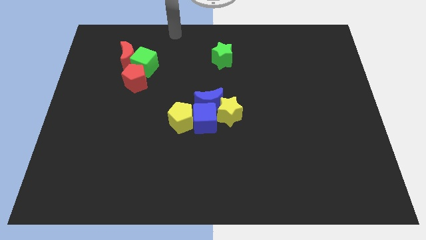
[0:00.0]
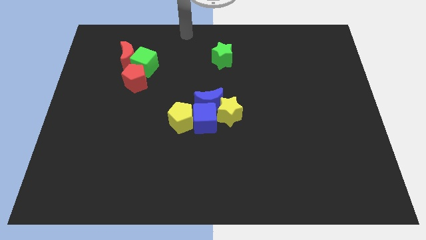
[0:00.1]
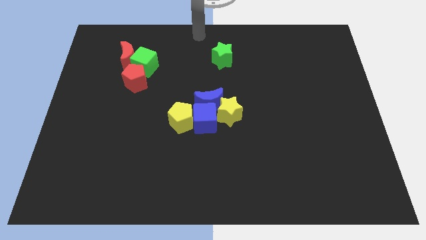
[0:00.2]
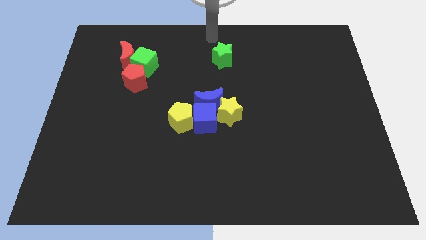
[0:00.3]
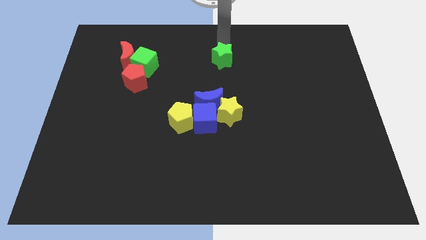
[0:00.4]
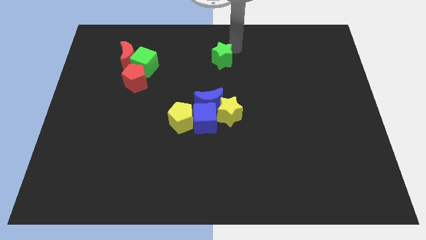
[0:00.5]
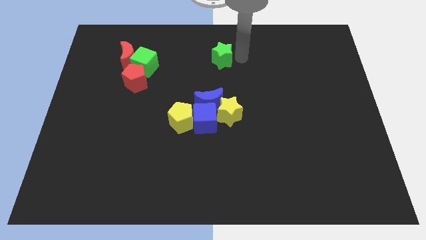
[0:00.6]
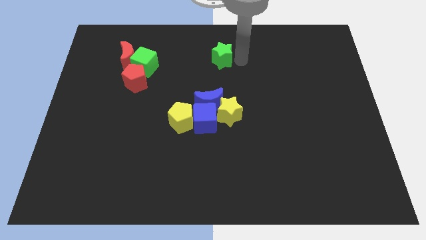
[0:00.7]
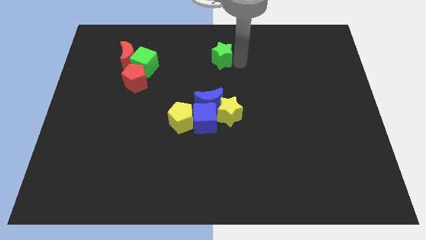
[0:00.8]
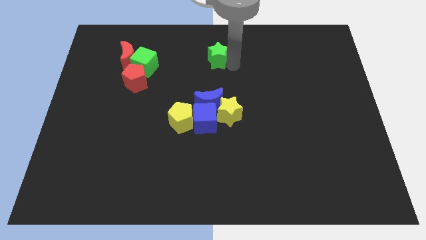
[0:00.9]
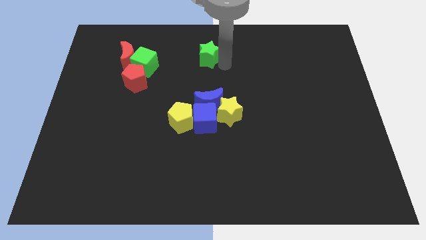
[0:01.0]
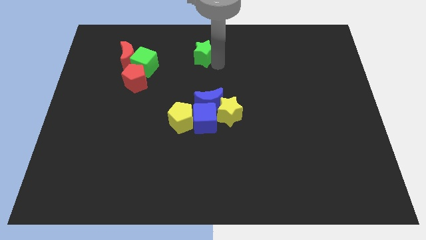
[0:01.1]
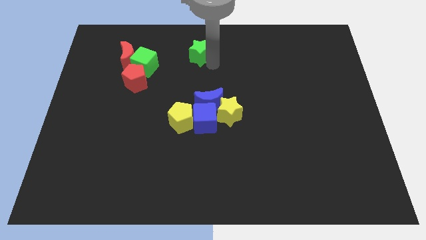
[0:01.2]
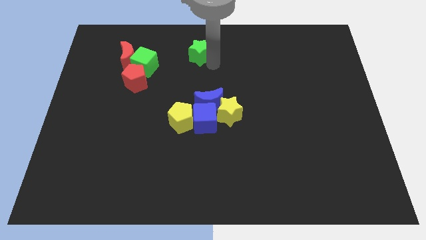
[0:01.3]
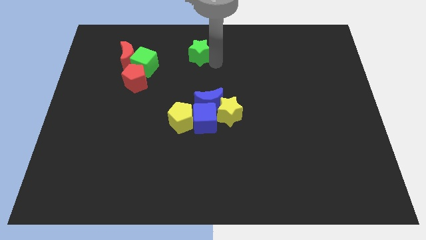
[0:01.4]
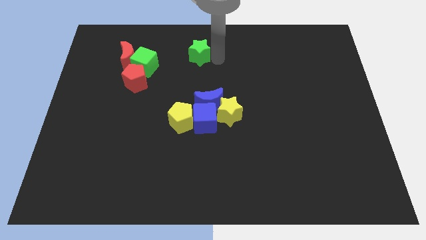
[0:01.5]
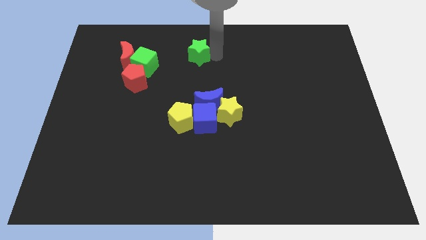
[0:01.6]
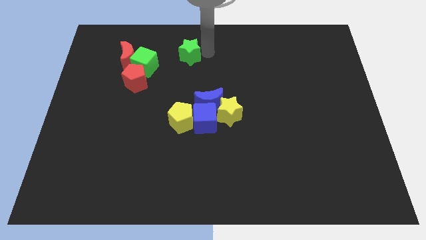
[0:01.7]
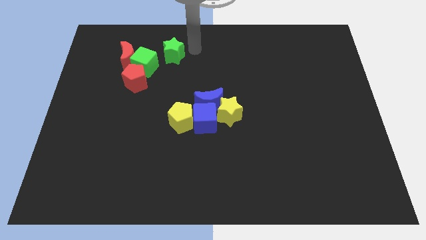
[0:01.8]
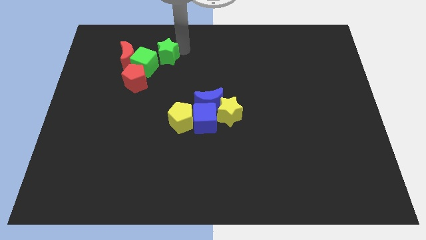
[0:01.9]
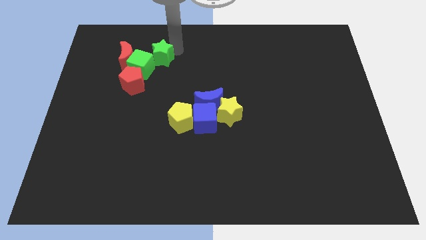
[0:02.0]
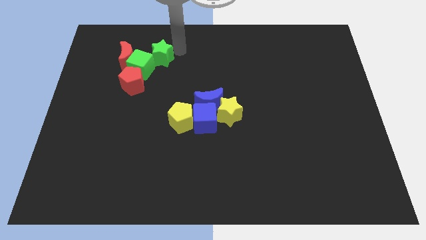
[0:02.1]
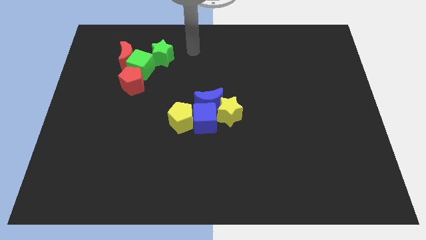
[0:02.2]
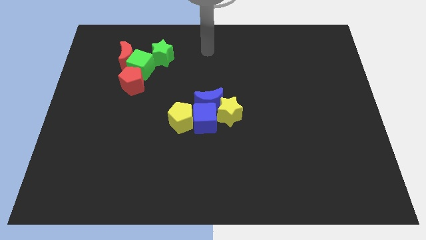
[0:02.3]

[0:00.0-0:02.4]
place green star above green cube

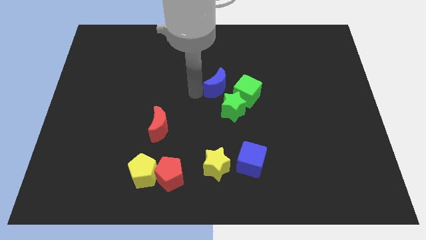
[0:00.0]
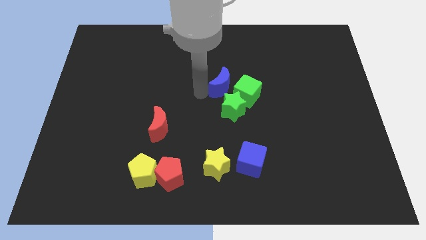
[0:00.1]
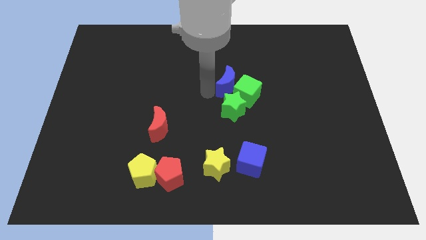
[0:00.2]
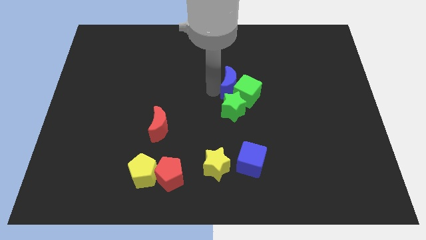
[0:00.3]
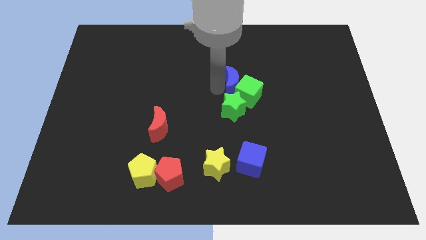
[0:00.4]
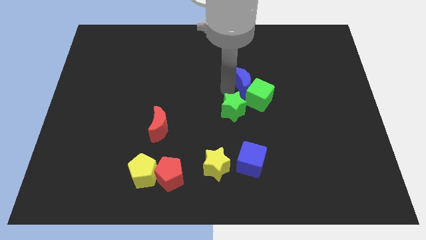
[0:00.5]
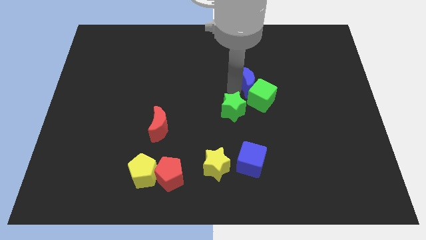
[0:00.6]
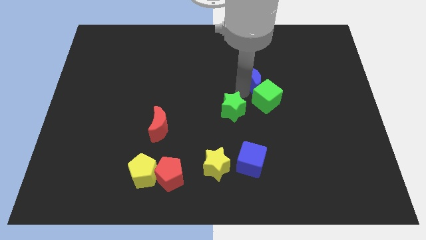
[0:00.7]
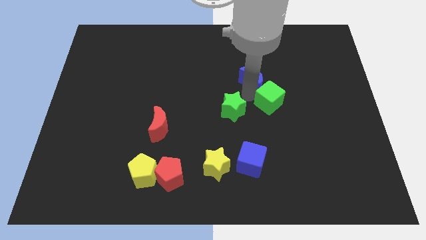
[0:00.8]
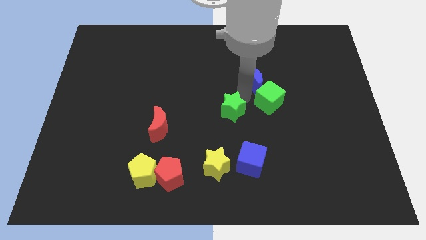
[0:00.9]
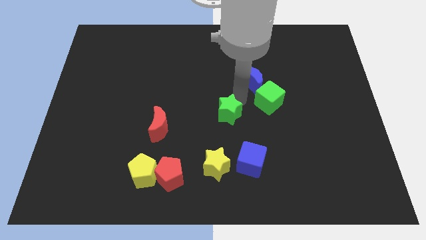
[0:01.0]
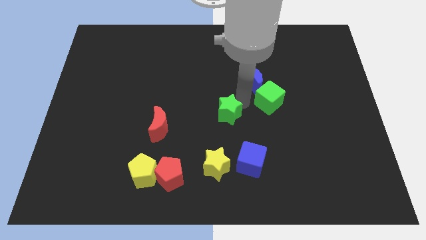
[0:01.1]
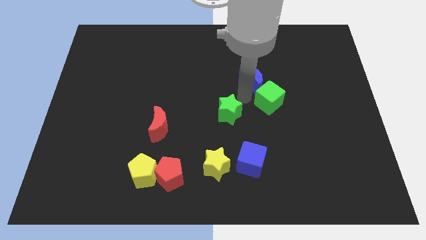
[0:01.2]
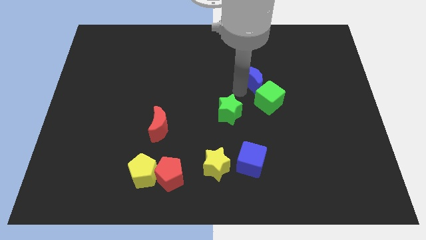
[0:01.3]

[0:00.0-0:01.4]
push blue crescent in to green cube

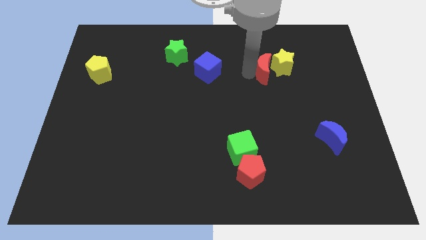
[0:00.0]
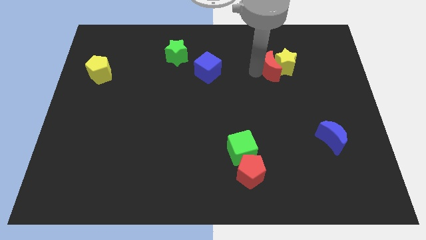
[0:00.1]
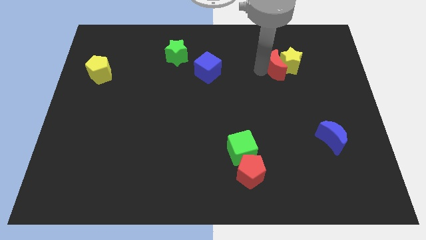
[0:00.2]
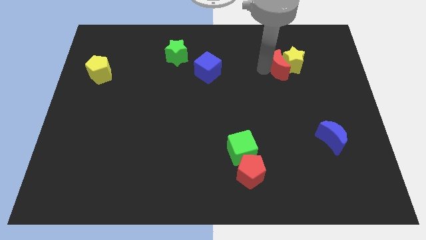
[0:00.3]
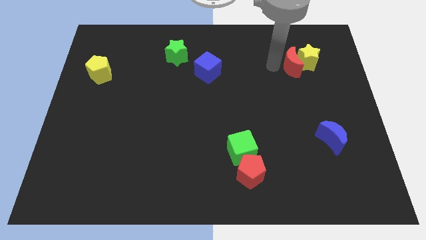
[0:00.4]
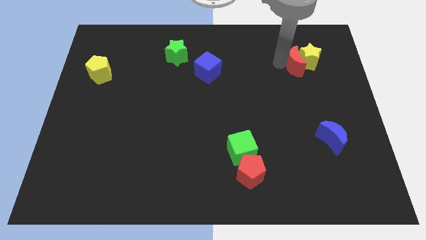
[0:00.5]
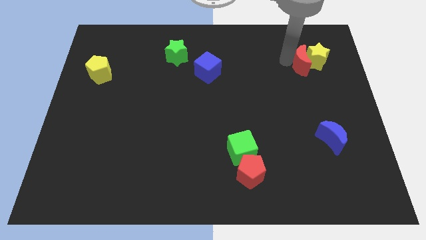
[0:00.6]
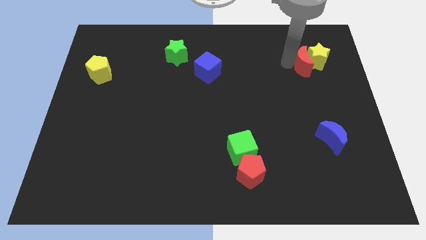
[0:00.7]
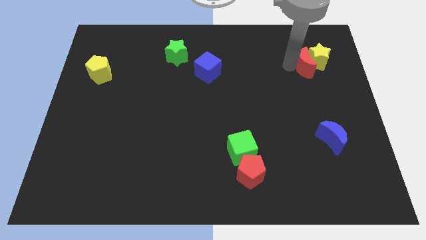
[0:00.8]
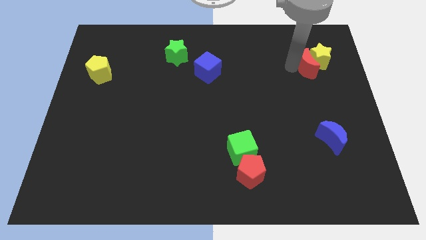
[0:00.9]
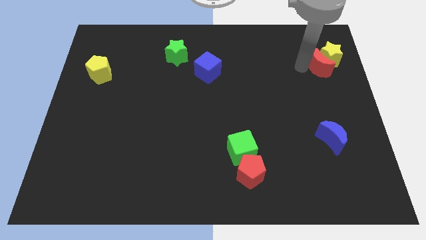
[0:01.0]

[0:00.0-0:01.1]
push red moon into yellow star

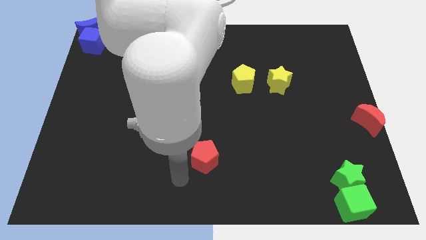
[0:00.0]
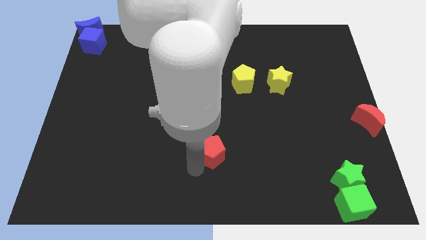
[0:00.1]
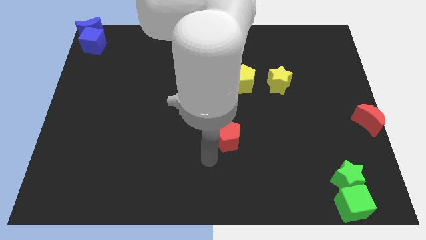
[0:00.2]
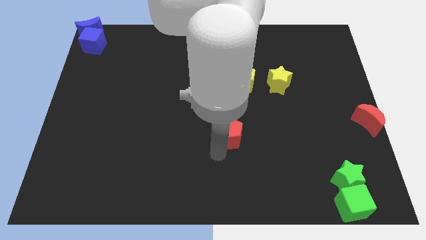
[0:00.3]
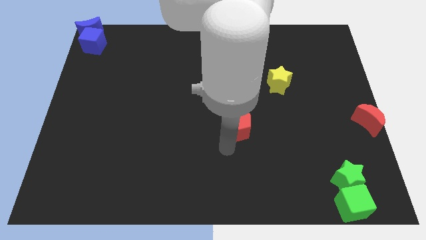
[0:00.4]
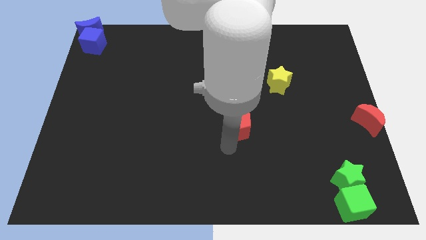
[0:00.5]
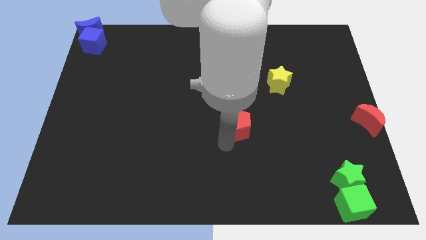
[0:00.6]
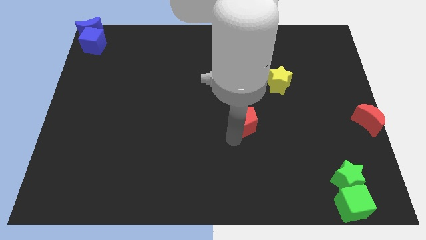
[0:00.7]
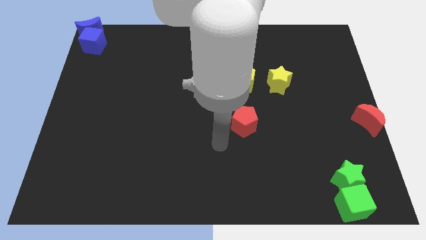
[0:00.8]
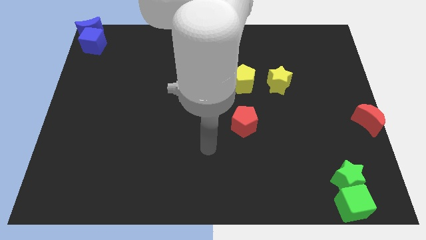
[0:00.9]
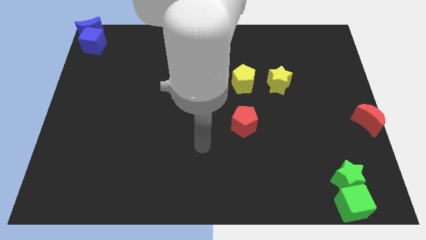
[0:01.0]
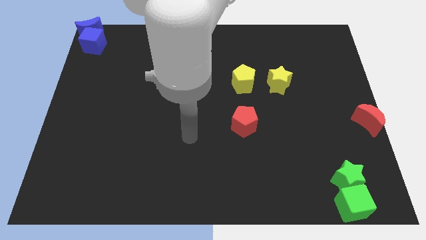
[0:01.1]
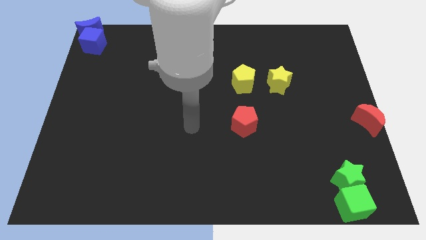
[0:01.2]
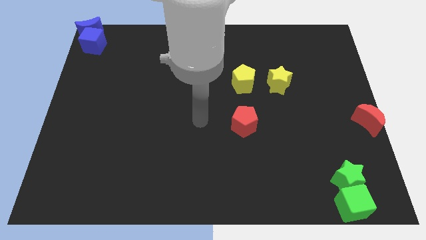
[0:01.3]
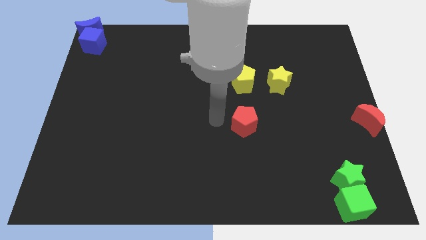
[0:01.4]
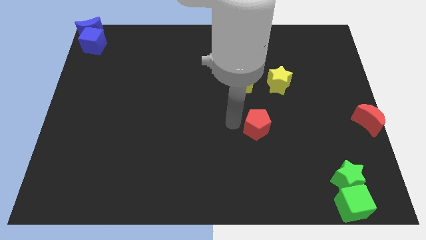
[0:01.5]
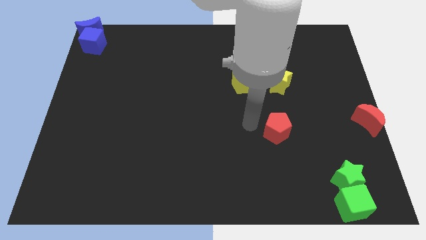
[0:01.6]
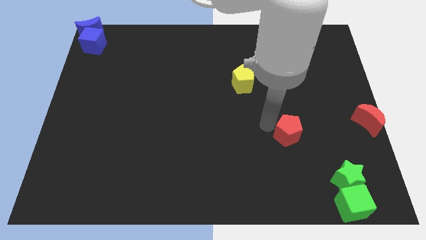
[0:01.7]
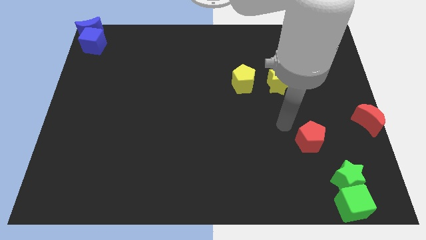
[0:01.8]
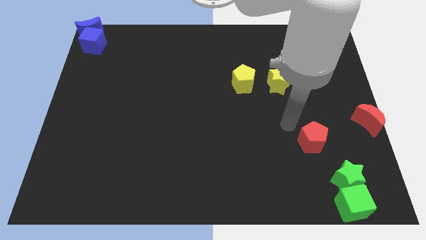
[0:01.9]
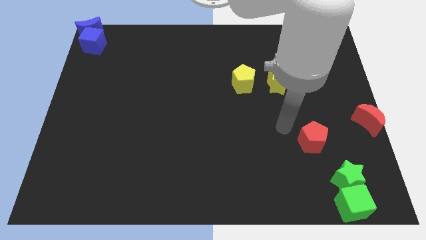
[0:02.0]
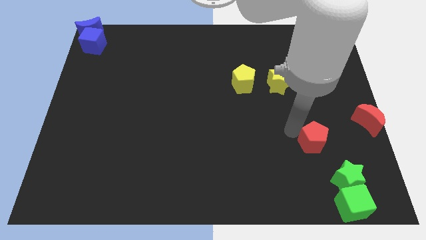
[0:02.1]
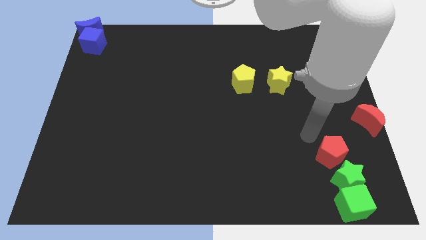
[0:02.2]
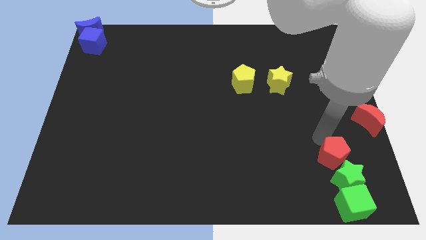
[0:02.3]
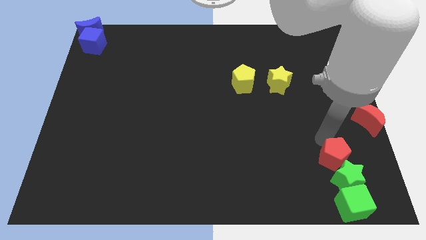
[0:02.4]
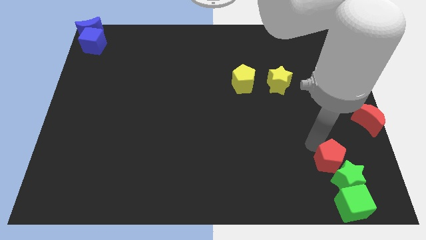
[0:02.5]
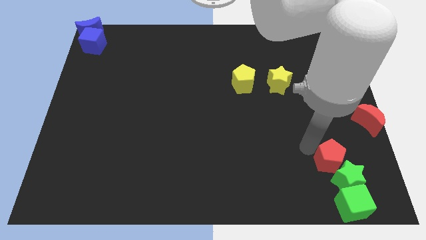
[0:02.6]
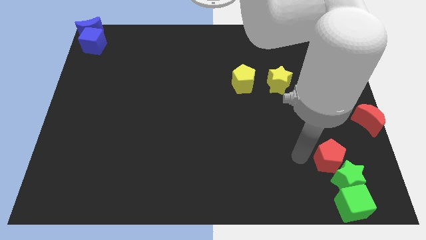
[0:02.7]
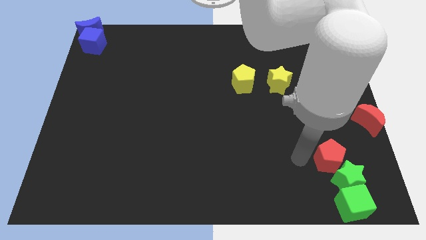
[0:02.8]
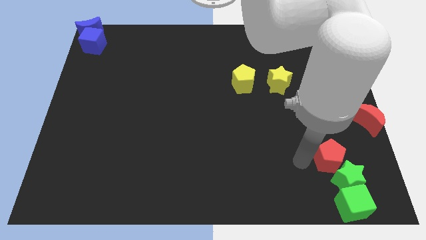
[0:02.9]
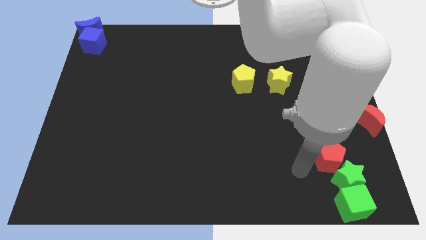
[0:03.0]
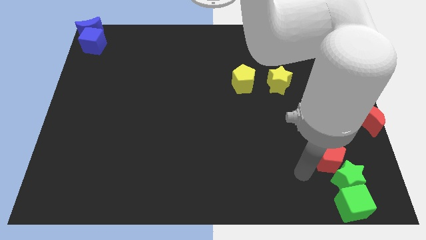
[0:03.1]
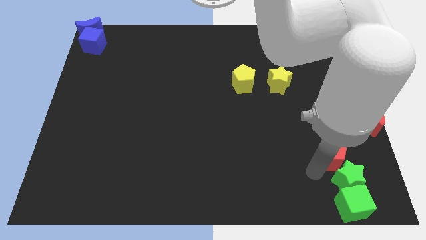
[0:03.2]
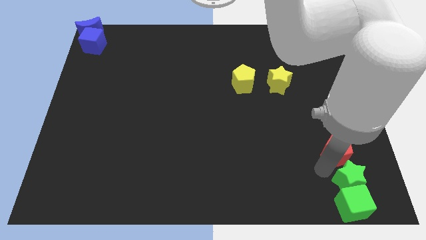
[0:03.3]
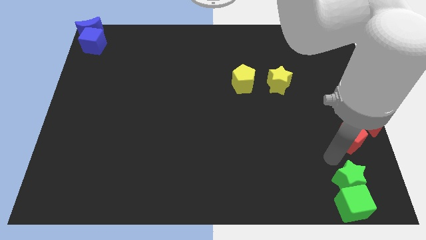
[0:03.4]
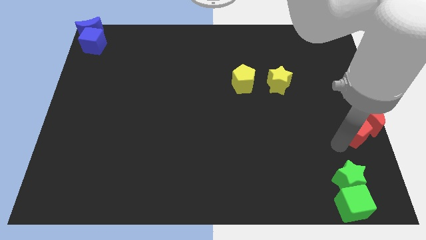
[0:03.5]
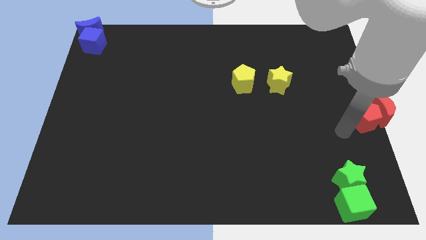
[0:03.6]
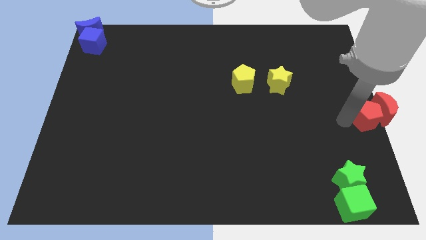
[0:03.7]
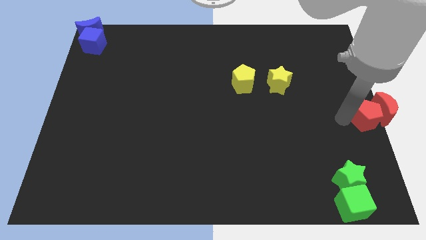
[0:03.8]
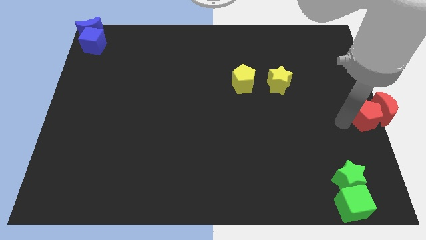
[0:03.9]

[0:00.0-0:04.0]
push the red pentagon into the red moon

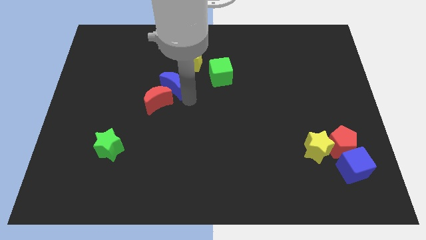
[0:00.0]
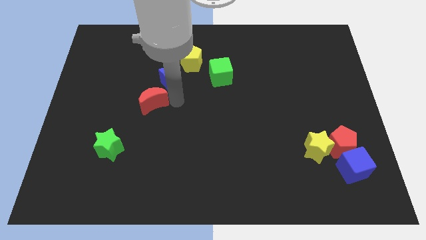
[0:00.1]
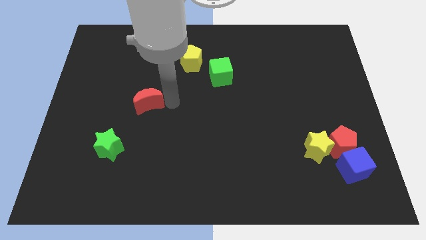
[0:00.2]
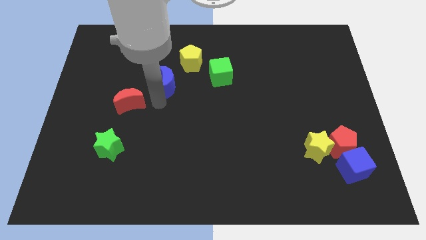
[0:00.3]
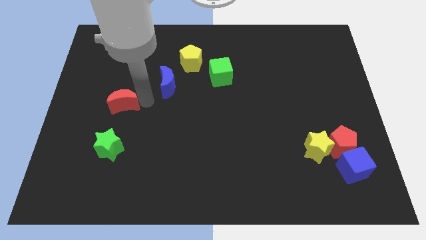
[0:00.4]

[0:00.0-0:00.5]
separate red crescent away from blue moon
